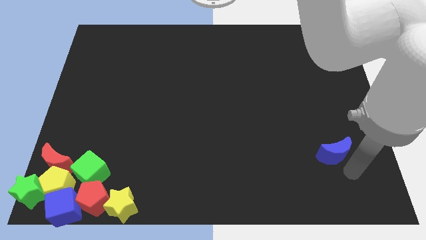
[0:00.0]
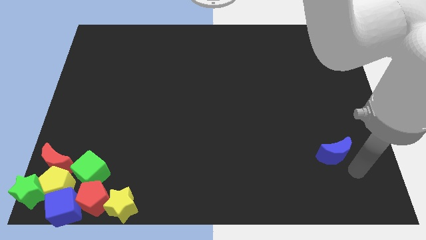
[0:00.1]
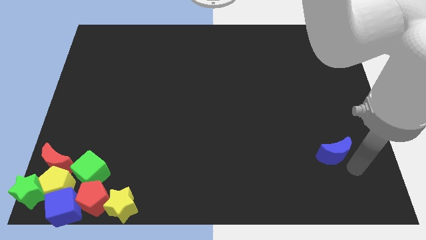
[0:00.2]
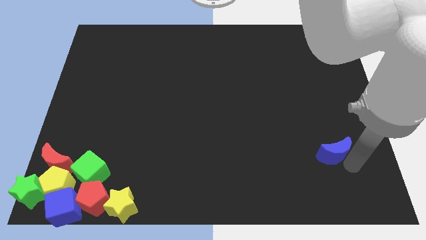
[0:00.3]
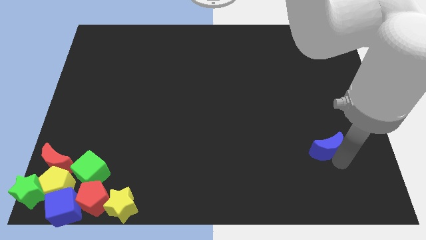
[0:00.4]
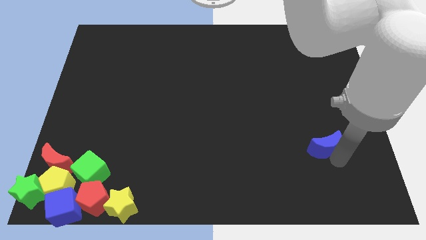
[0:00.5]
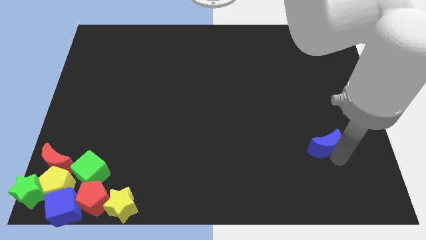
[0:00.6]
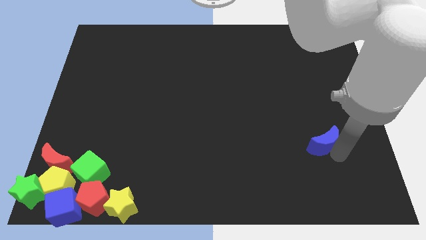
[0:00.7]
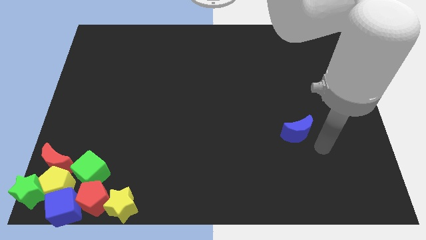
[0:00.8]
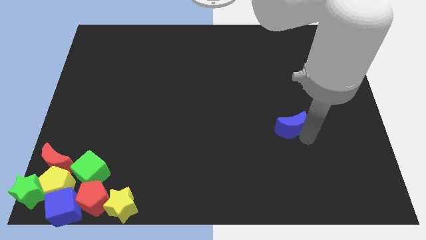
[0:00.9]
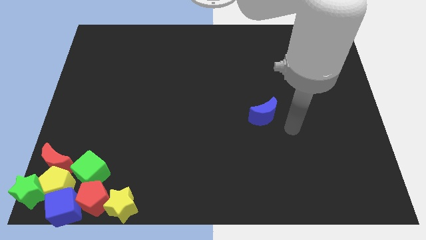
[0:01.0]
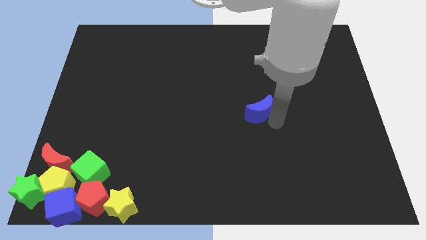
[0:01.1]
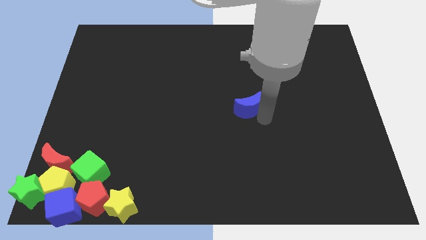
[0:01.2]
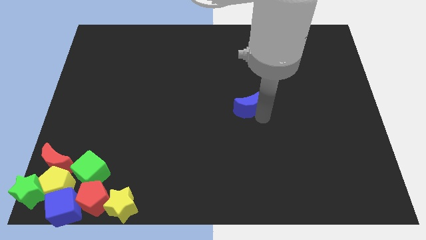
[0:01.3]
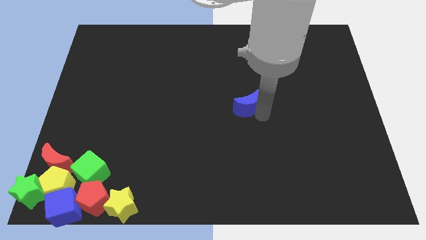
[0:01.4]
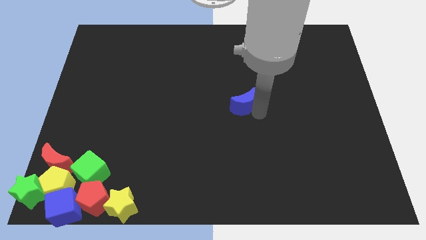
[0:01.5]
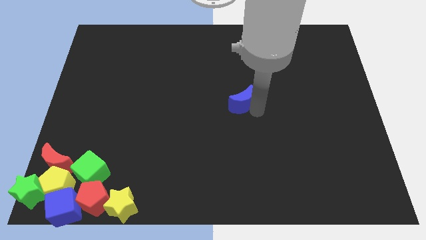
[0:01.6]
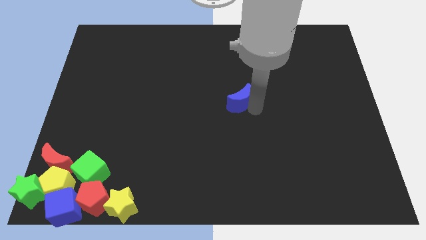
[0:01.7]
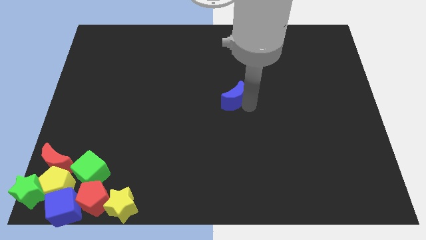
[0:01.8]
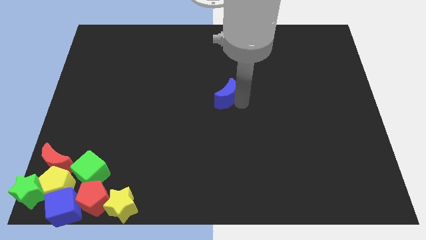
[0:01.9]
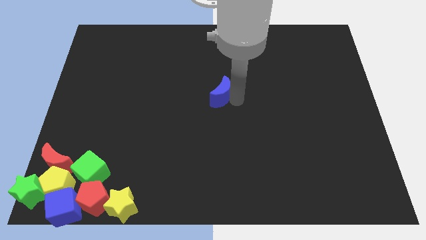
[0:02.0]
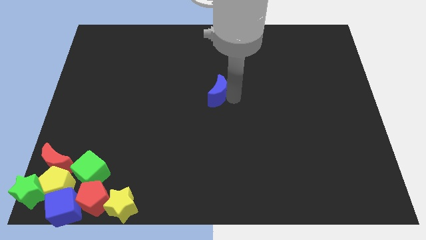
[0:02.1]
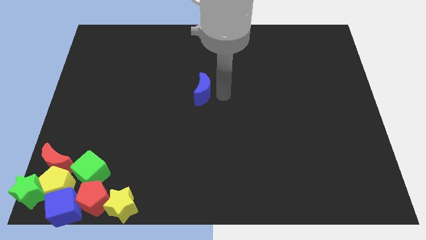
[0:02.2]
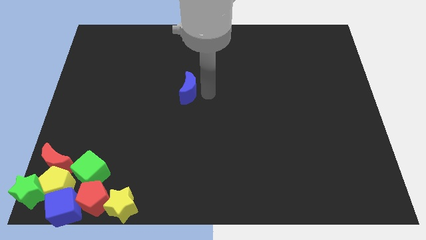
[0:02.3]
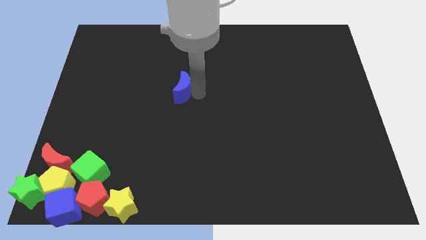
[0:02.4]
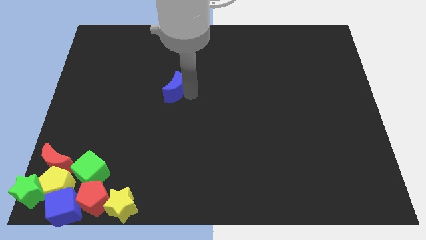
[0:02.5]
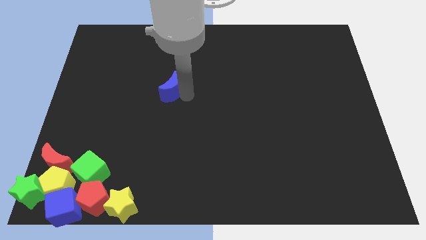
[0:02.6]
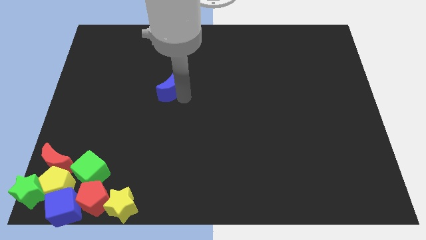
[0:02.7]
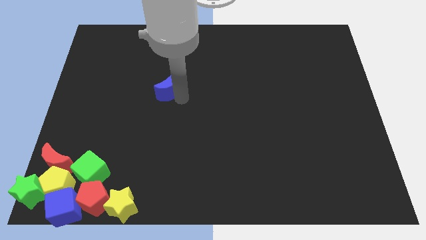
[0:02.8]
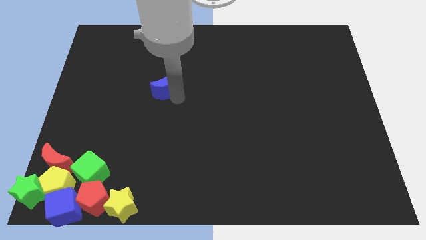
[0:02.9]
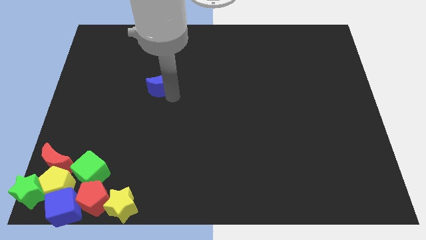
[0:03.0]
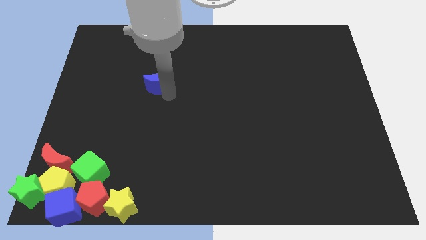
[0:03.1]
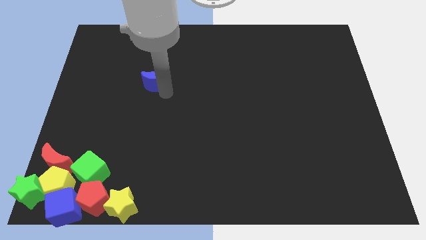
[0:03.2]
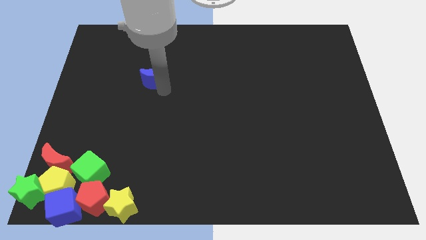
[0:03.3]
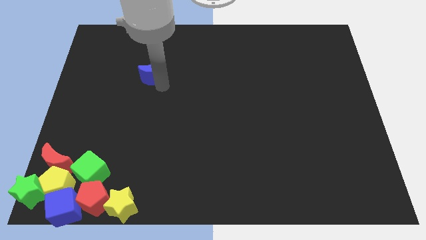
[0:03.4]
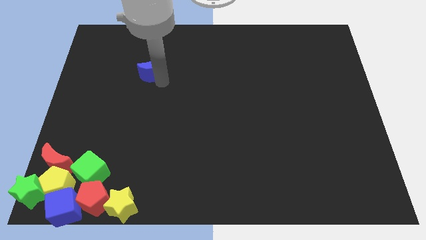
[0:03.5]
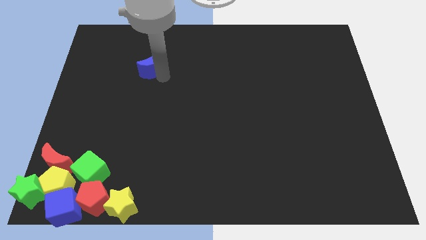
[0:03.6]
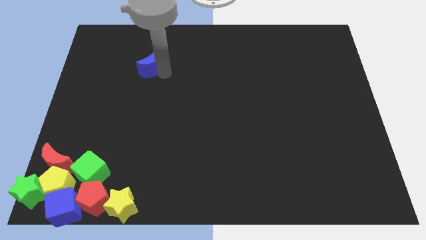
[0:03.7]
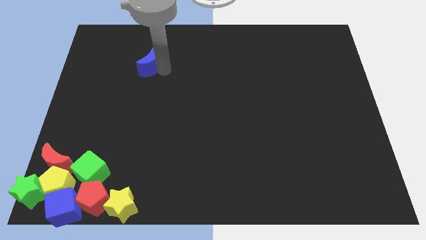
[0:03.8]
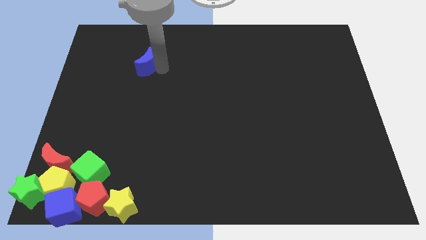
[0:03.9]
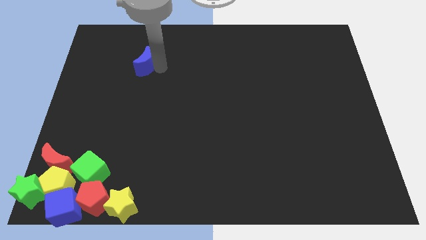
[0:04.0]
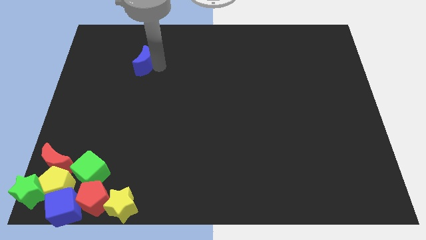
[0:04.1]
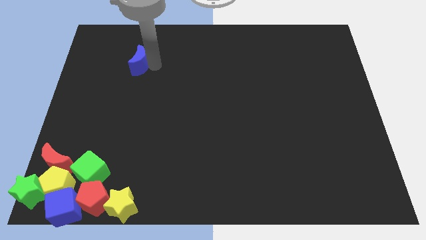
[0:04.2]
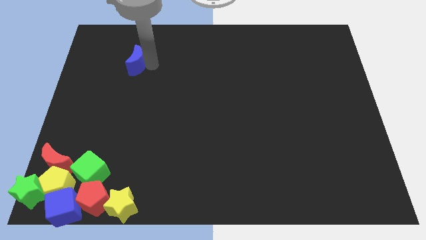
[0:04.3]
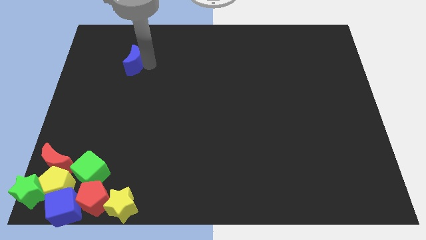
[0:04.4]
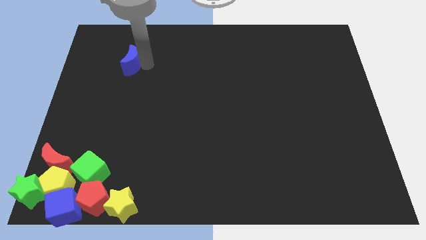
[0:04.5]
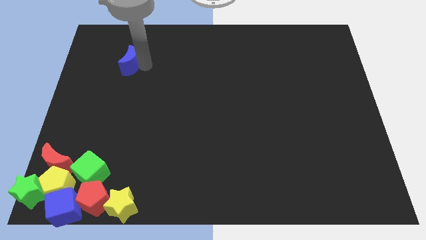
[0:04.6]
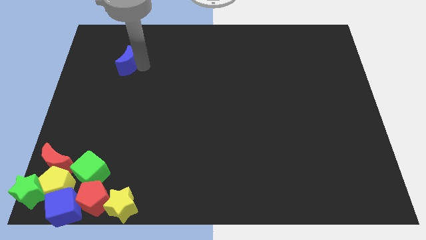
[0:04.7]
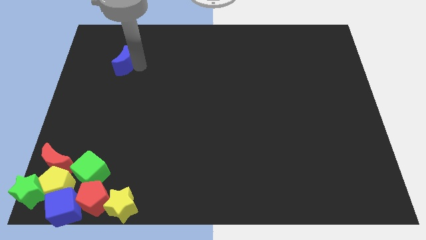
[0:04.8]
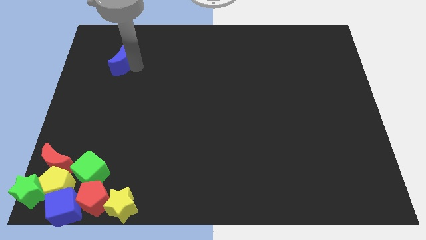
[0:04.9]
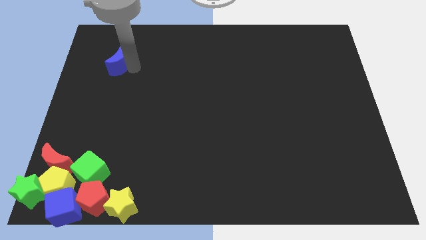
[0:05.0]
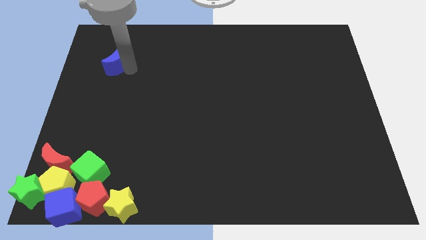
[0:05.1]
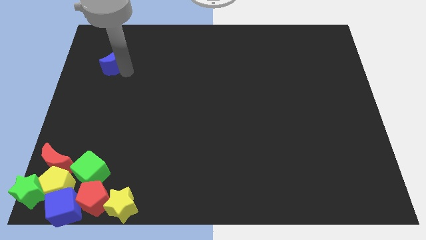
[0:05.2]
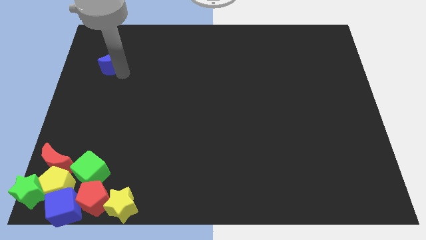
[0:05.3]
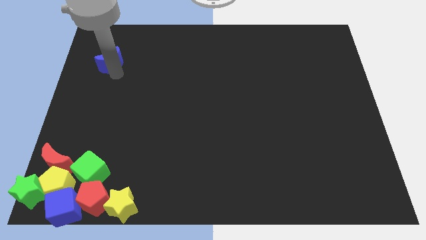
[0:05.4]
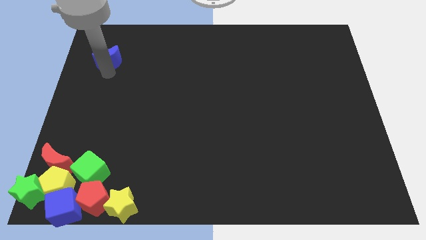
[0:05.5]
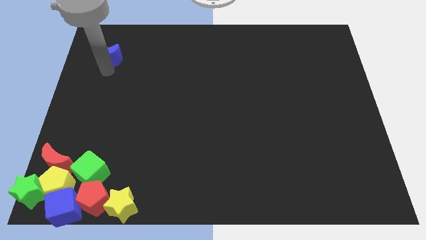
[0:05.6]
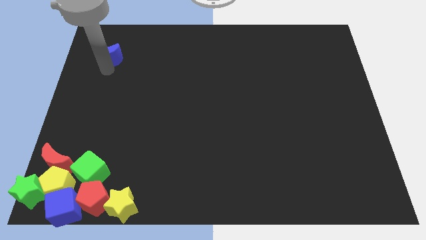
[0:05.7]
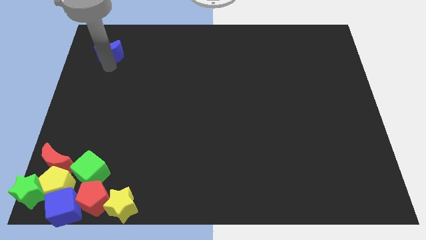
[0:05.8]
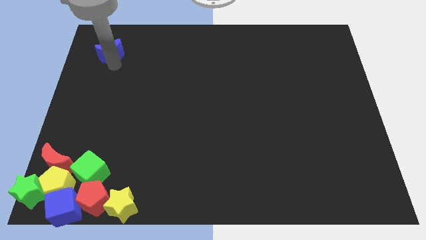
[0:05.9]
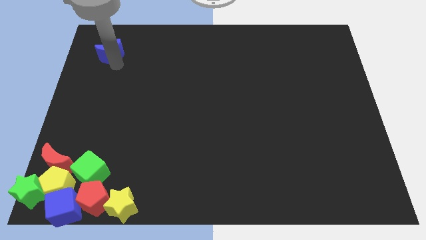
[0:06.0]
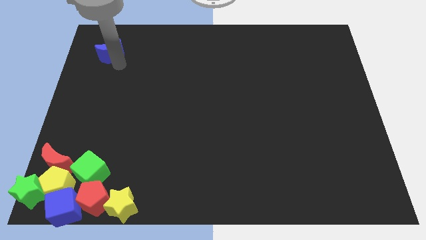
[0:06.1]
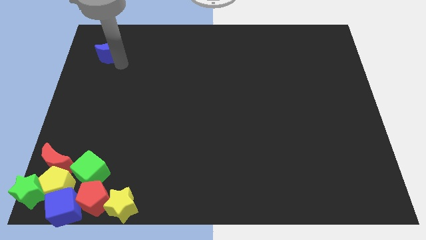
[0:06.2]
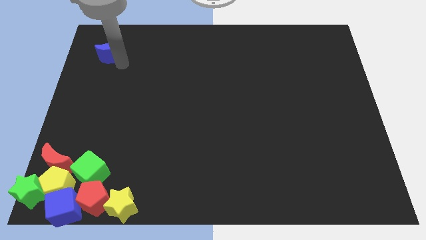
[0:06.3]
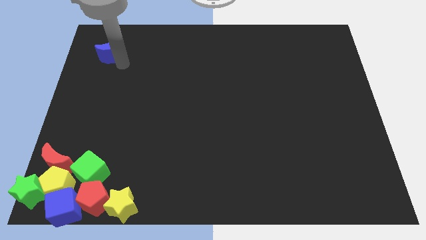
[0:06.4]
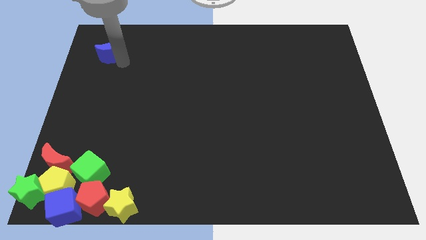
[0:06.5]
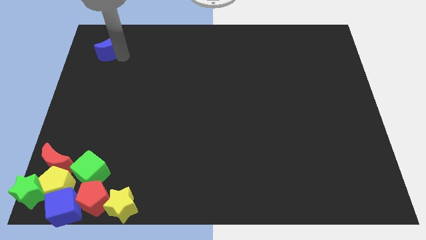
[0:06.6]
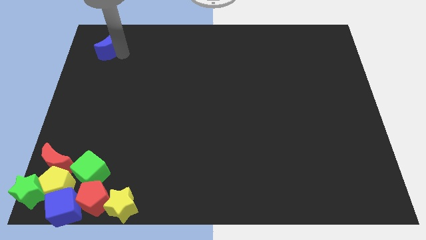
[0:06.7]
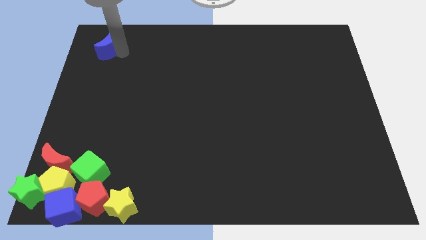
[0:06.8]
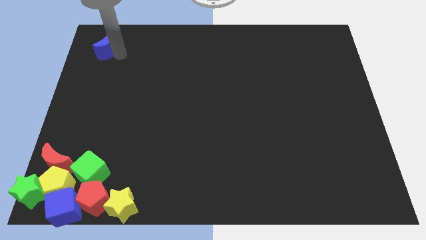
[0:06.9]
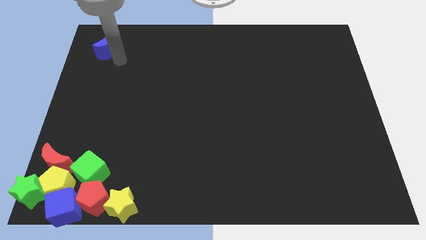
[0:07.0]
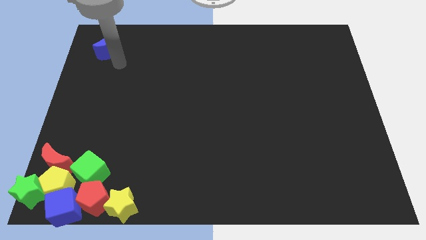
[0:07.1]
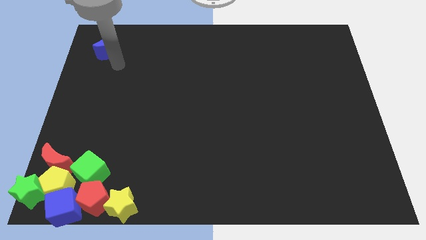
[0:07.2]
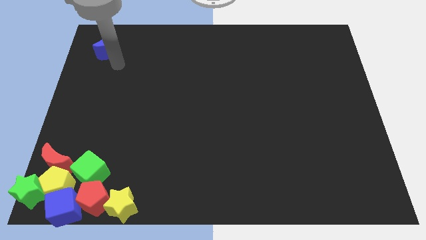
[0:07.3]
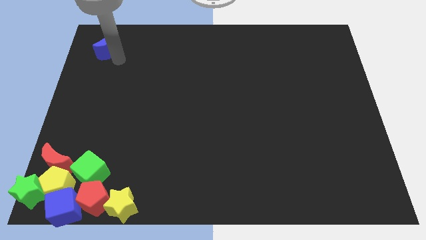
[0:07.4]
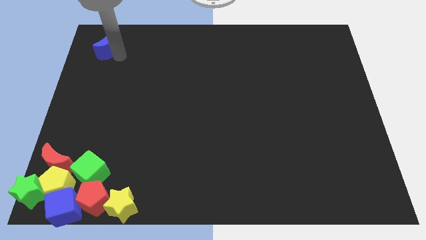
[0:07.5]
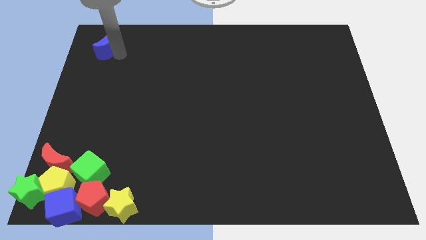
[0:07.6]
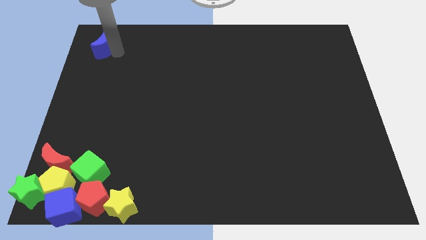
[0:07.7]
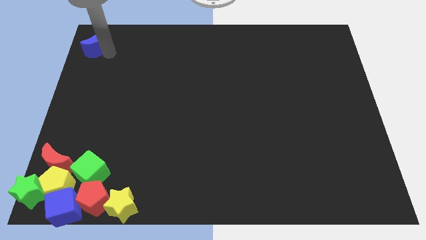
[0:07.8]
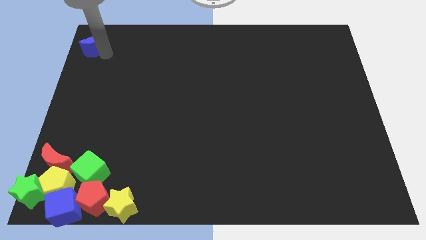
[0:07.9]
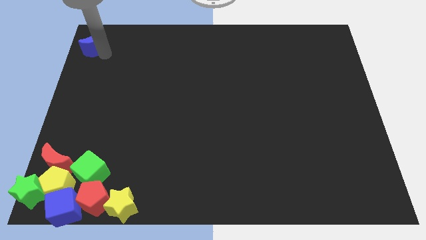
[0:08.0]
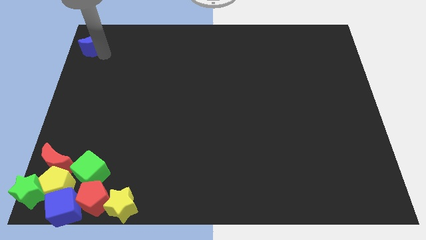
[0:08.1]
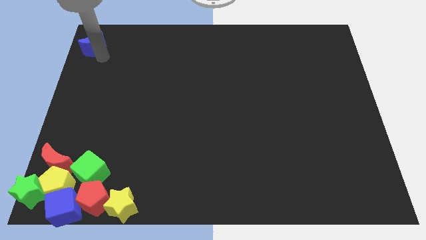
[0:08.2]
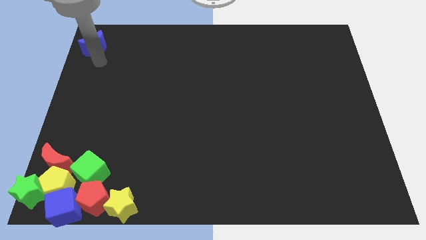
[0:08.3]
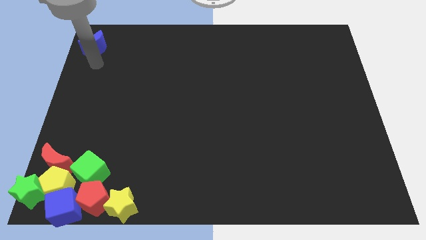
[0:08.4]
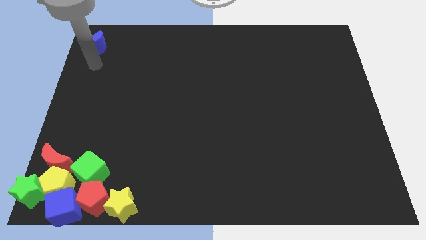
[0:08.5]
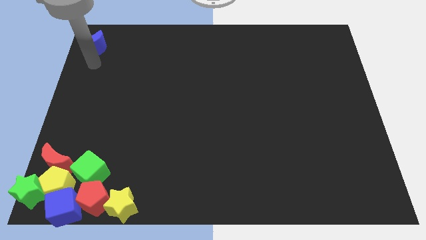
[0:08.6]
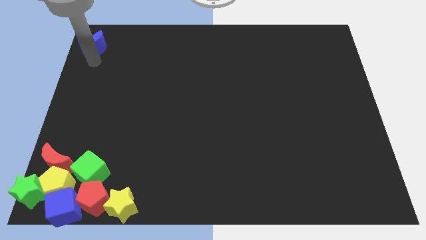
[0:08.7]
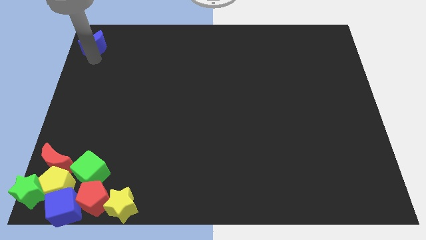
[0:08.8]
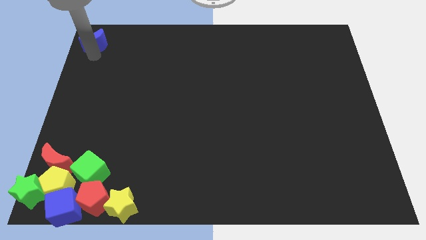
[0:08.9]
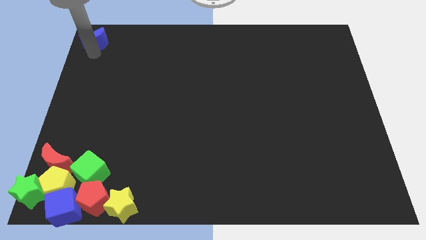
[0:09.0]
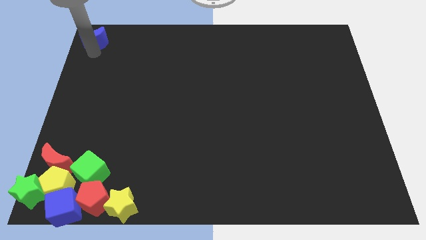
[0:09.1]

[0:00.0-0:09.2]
slide blue moon to the top left corner
